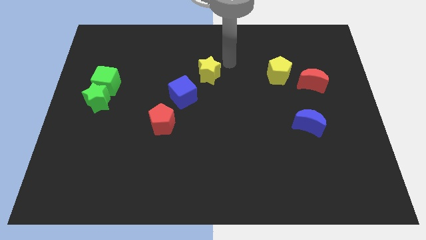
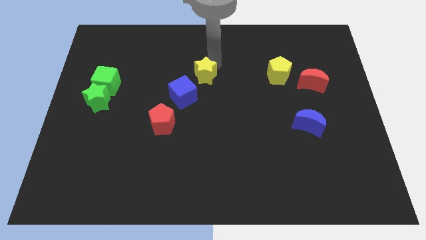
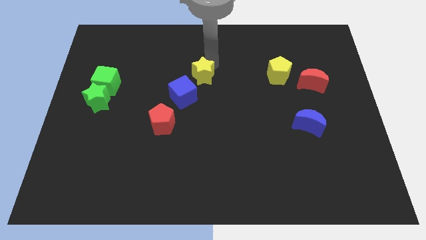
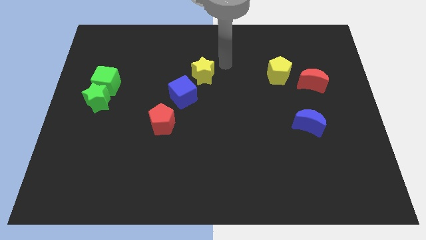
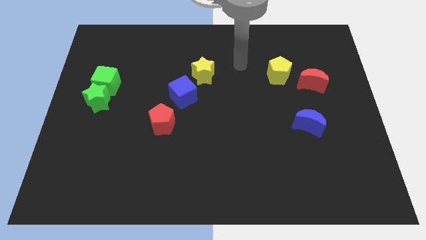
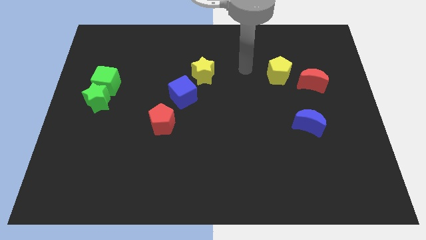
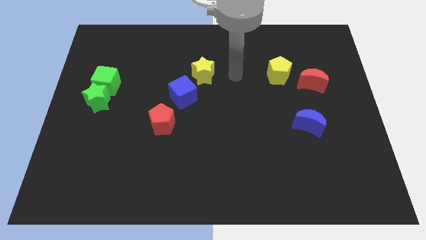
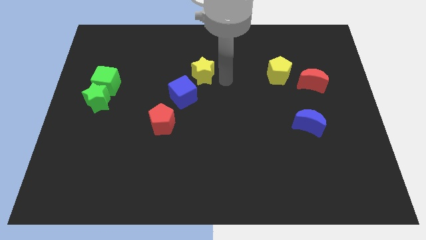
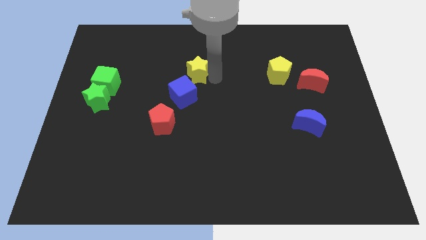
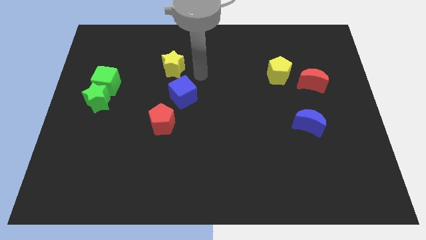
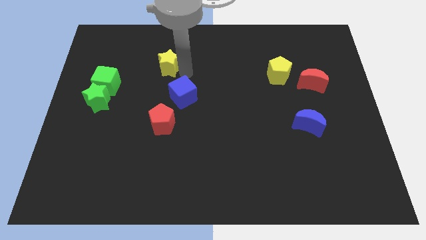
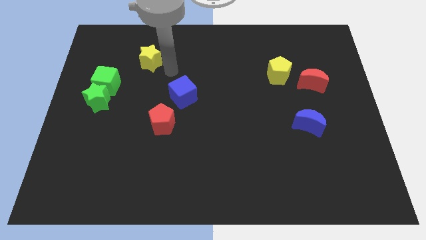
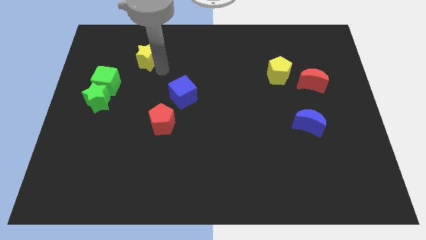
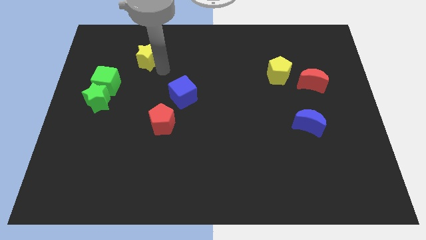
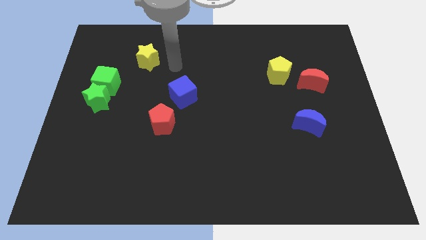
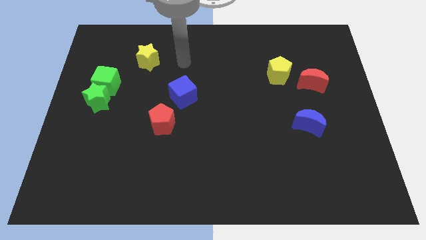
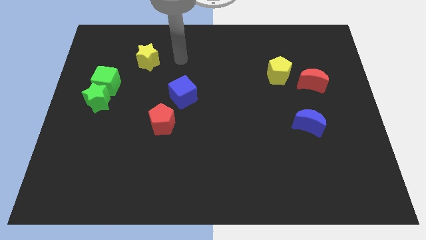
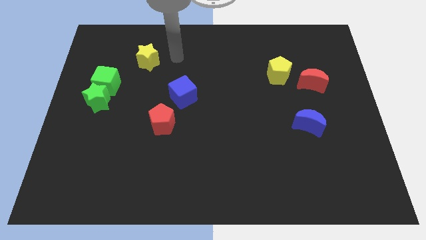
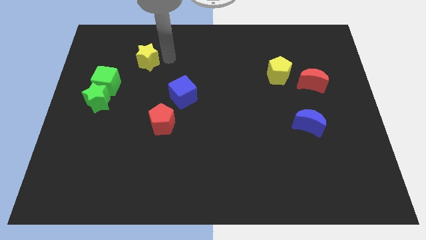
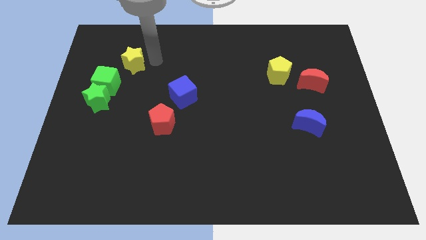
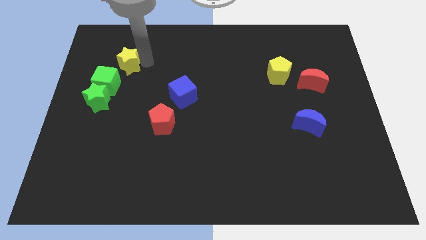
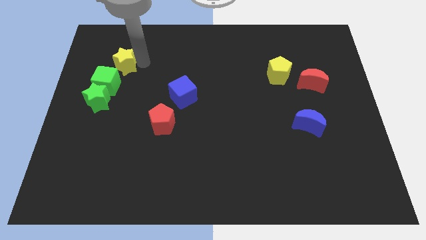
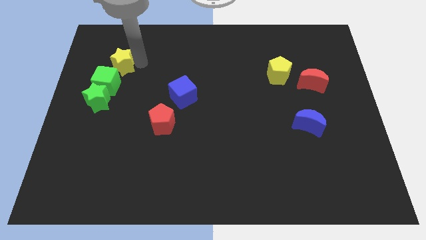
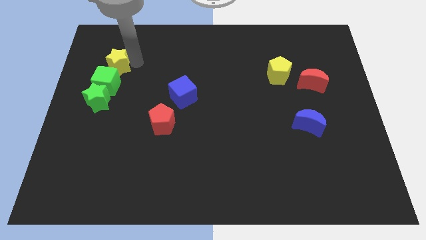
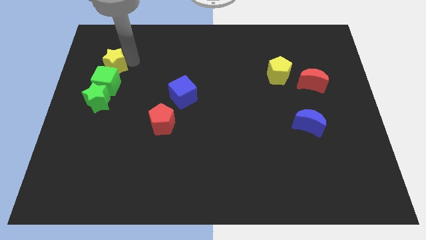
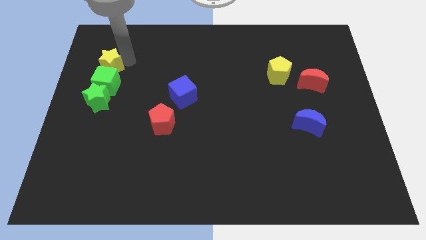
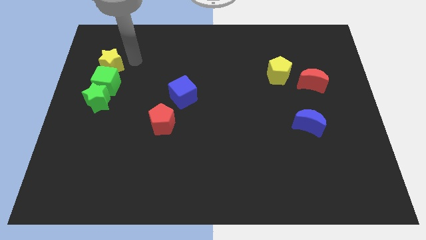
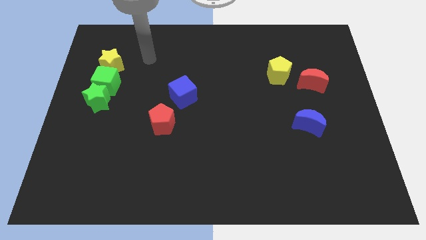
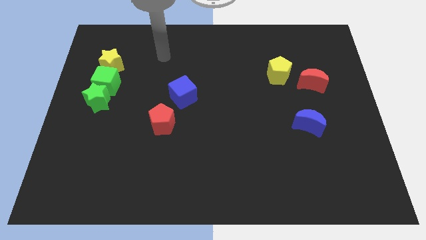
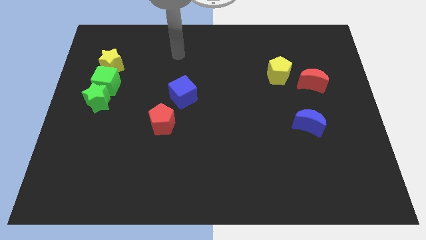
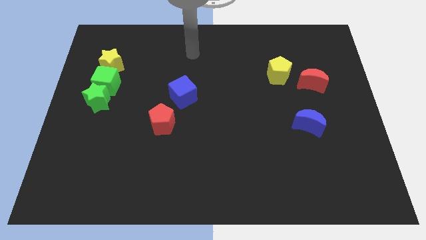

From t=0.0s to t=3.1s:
move the yellow star to the top of the green cube

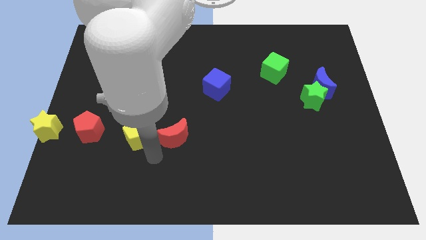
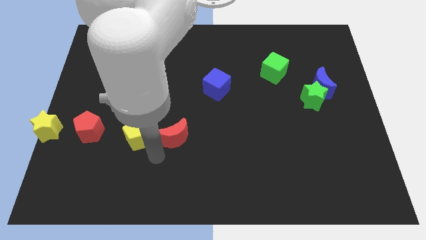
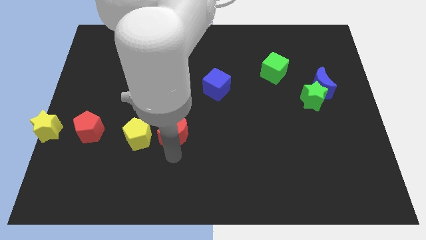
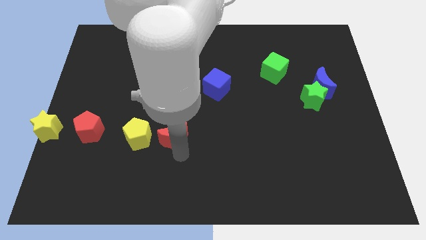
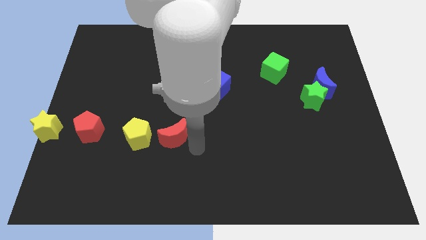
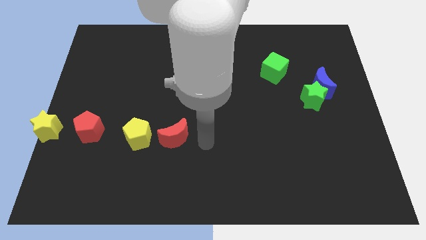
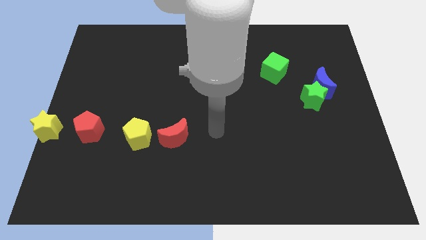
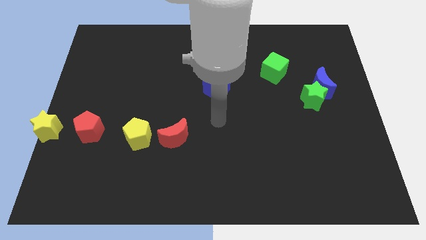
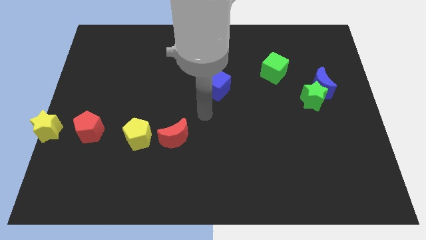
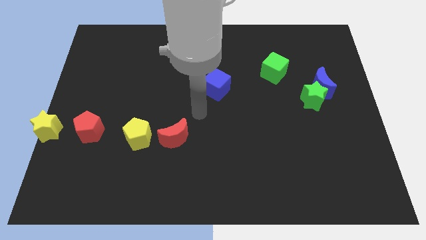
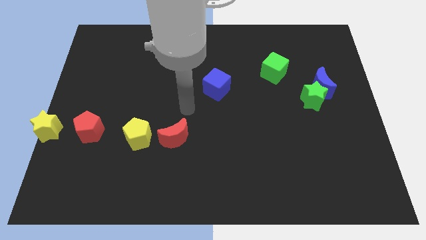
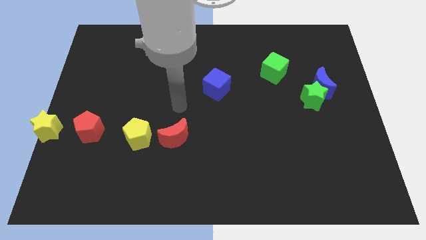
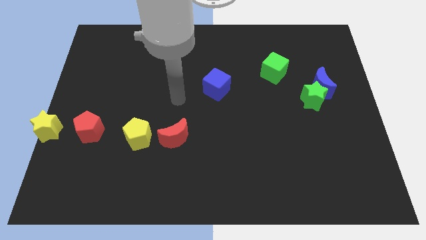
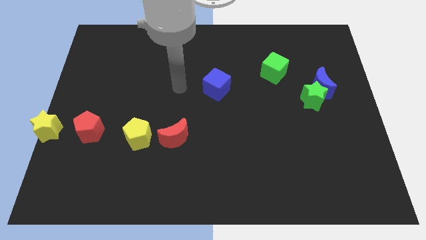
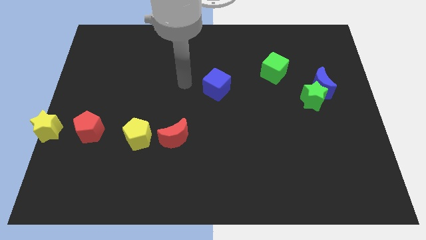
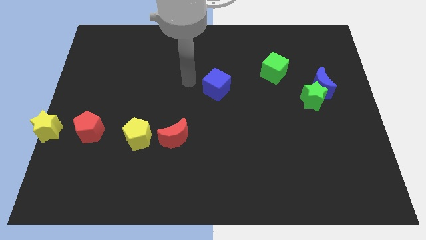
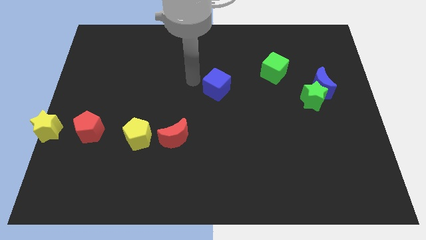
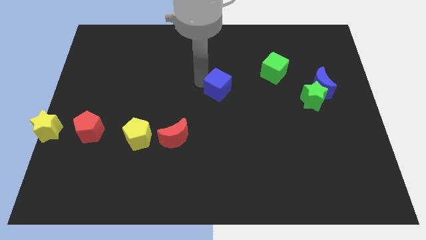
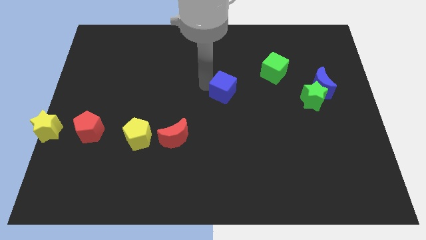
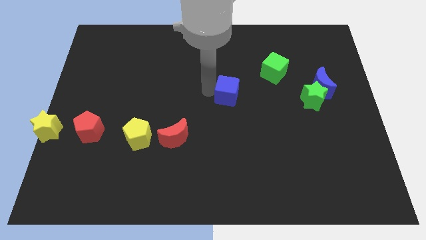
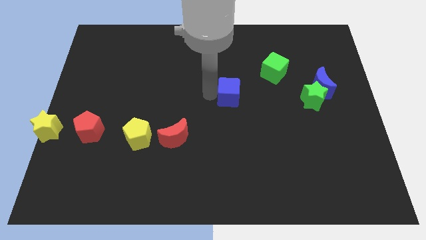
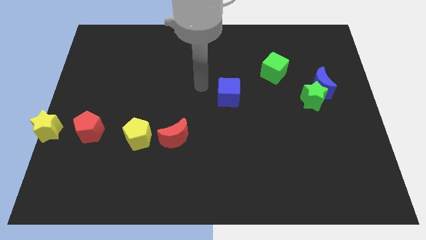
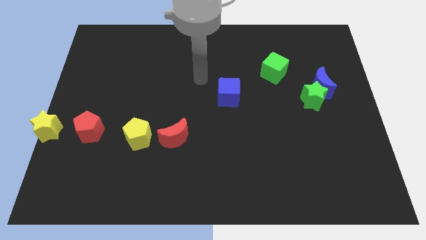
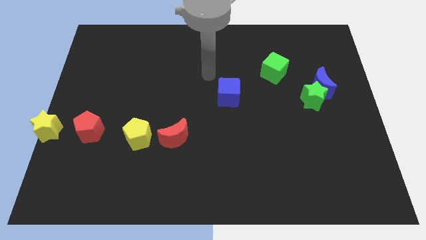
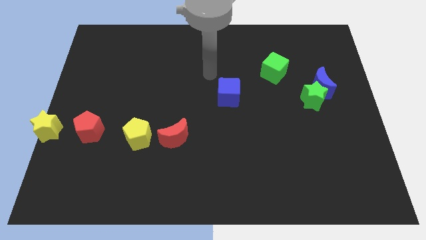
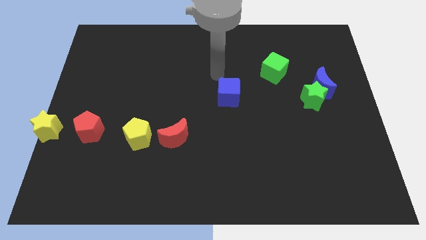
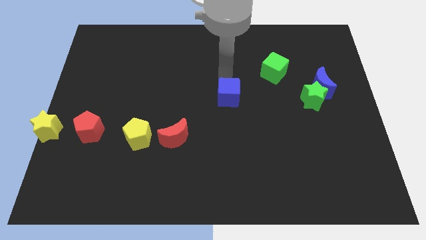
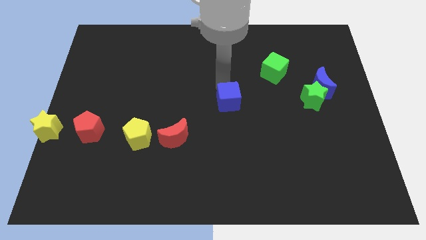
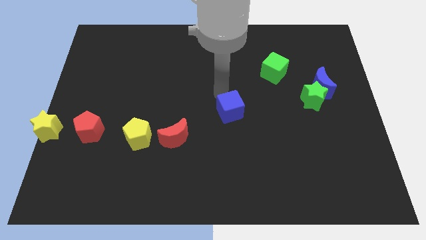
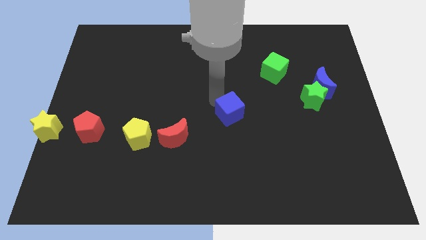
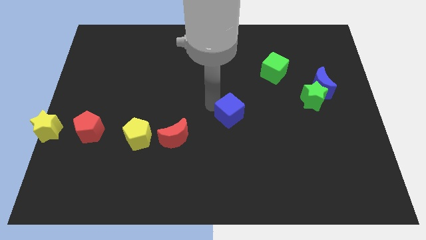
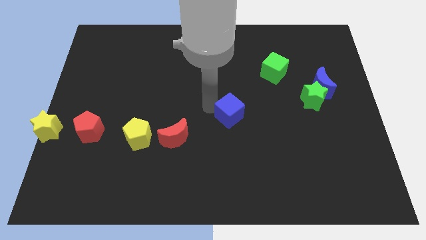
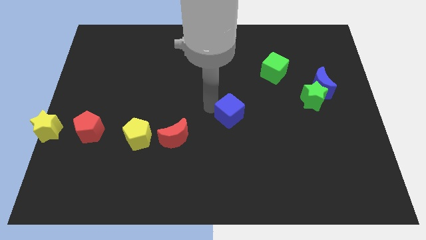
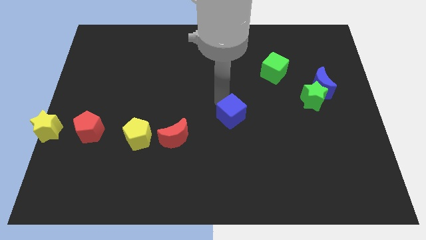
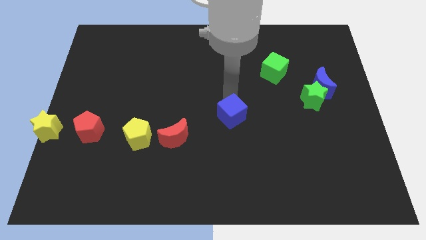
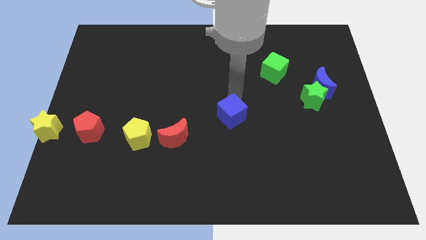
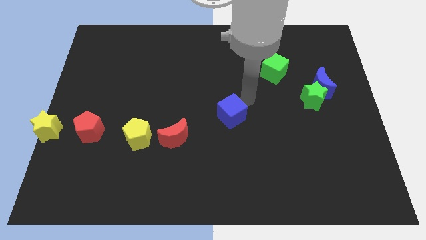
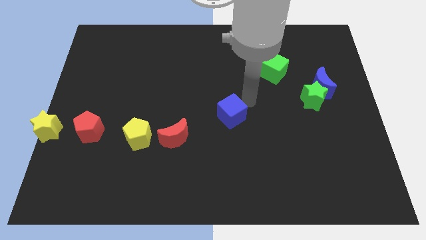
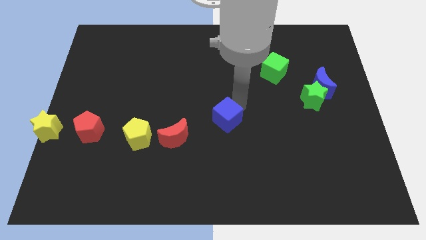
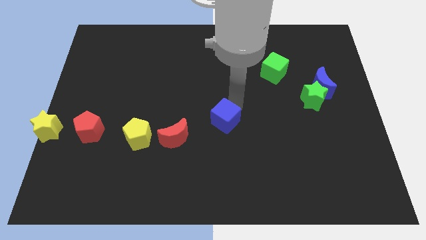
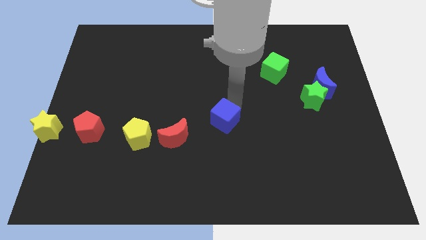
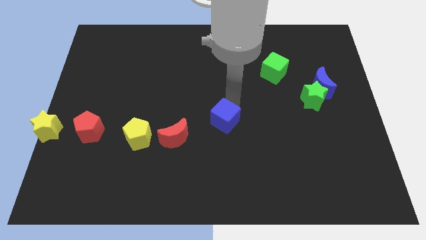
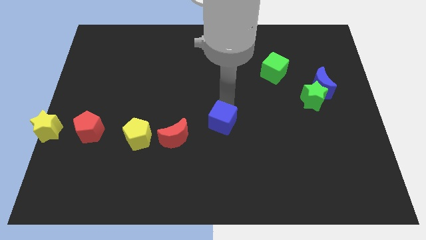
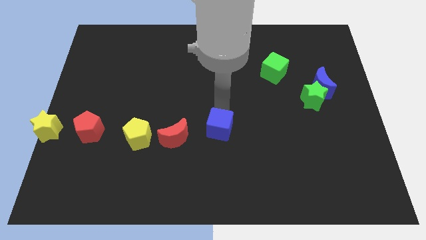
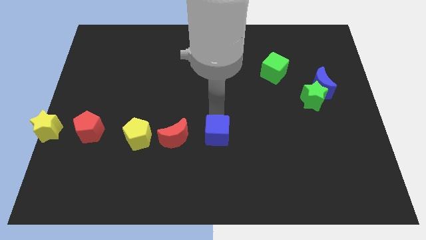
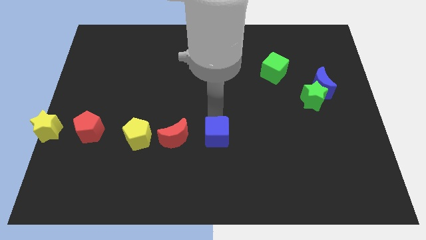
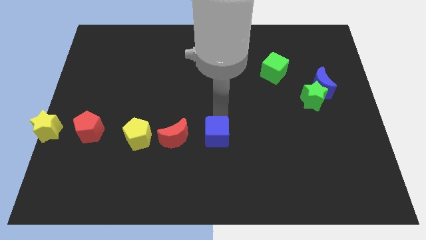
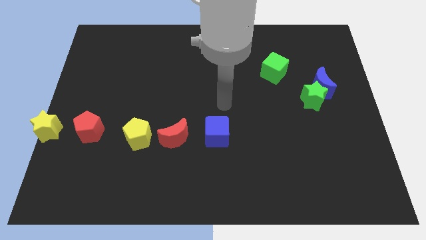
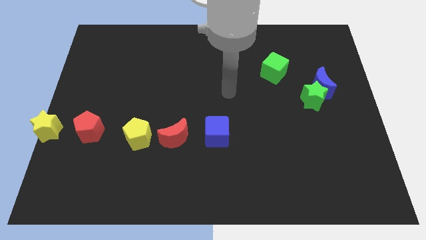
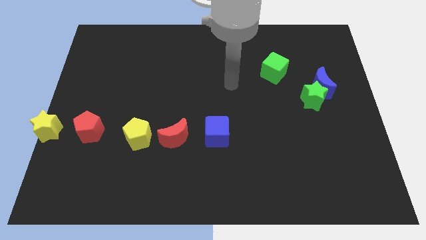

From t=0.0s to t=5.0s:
put the blue cube on the right side of the red crescent

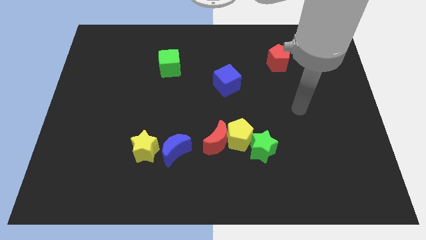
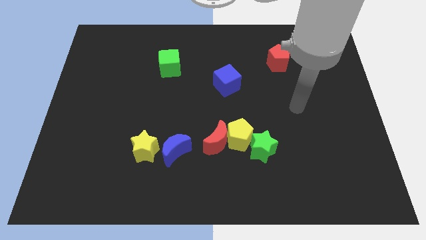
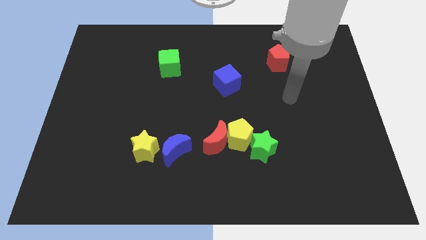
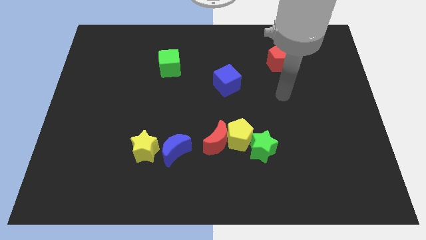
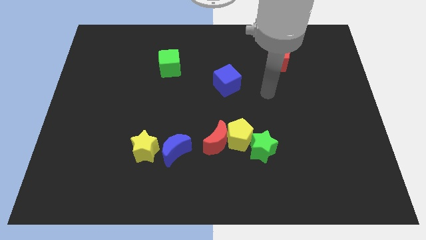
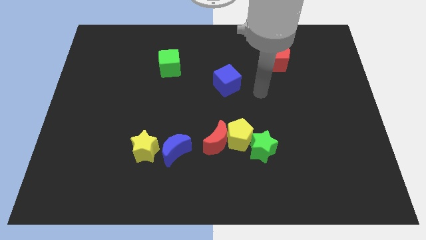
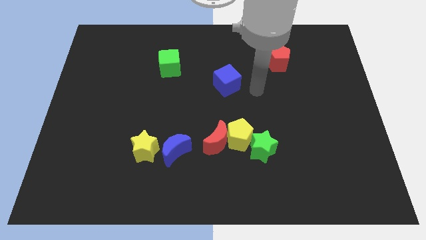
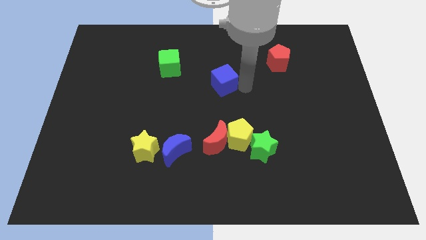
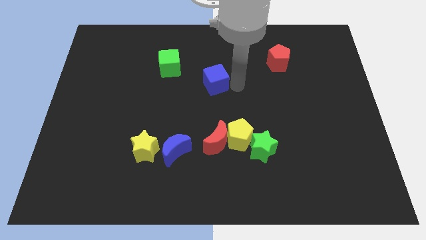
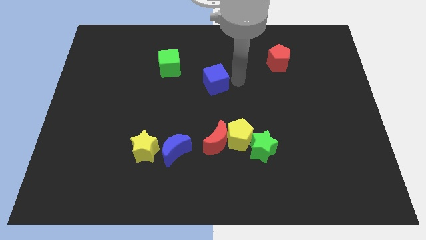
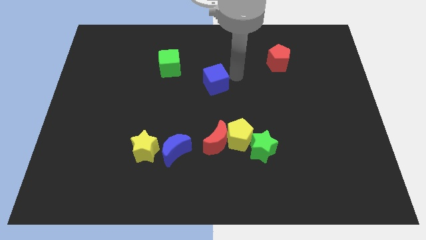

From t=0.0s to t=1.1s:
push blue cube above red crescent
